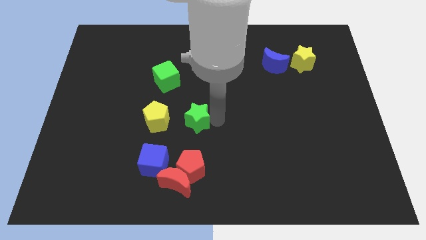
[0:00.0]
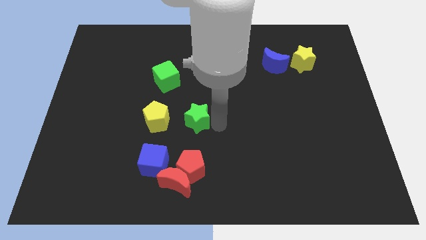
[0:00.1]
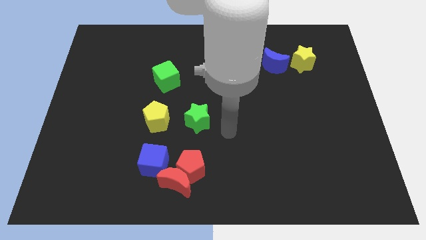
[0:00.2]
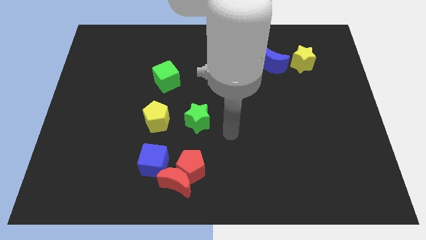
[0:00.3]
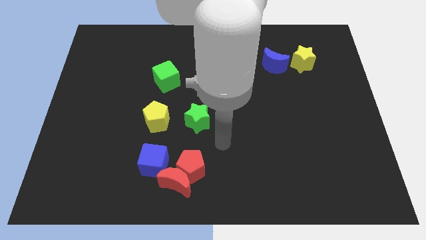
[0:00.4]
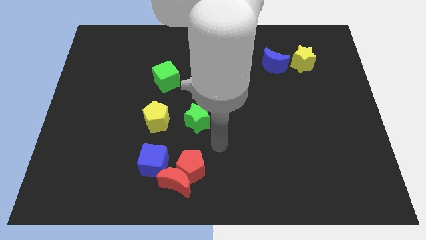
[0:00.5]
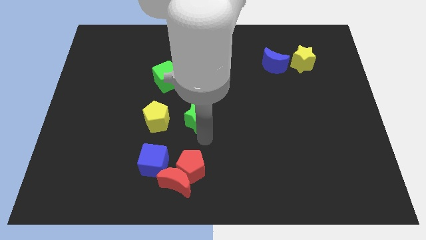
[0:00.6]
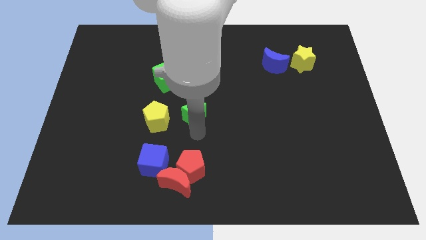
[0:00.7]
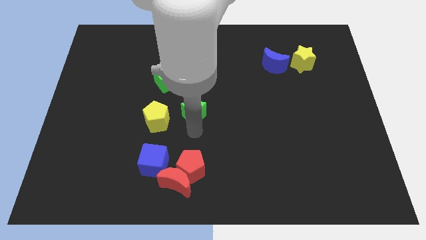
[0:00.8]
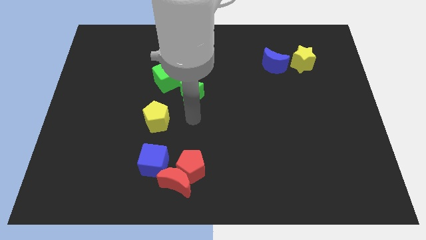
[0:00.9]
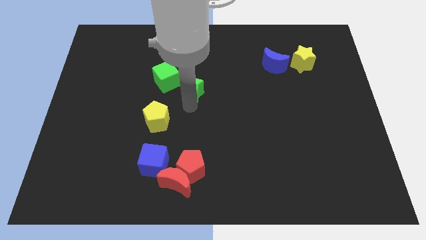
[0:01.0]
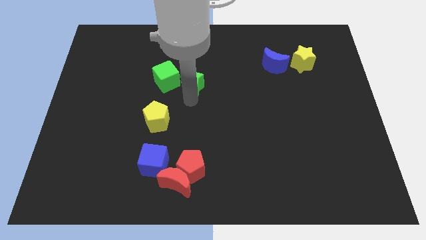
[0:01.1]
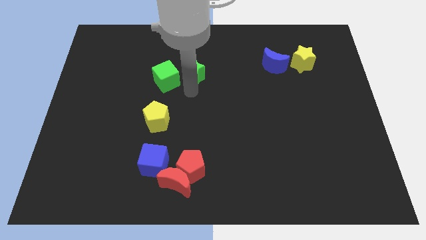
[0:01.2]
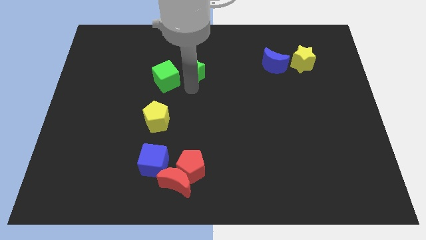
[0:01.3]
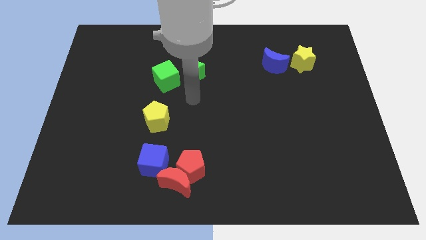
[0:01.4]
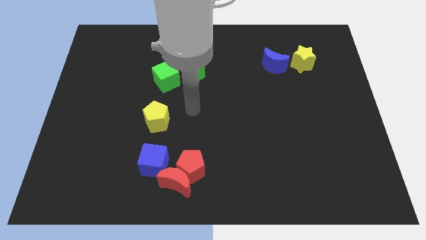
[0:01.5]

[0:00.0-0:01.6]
place the green star to the right side of the green cube

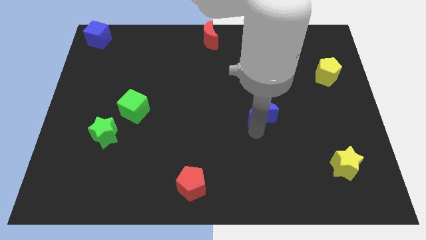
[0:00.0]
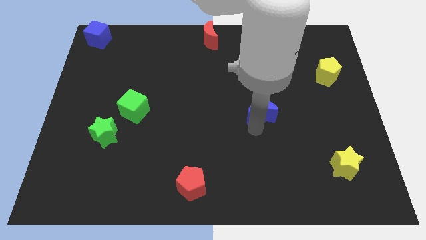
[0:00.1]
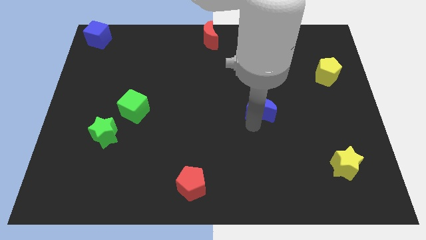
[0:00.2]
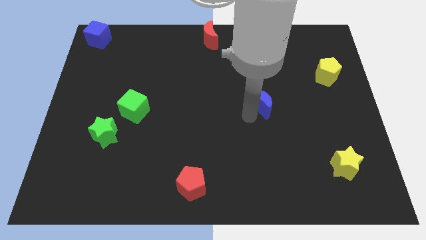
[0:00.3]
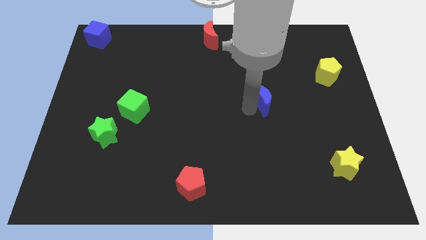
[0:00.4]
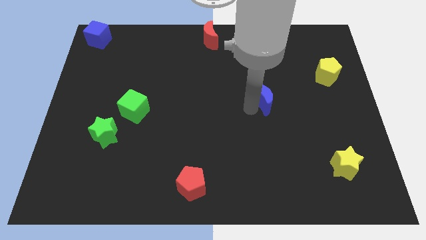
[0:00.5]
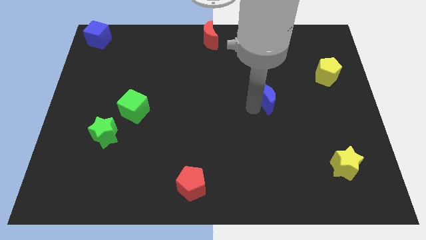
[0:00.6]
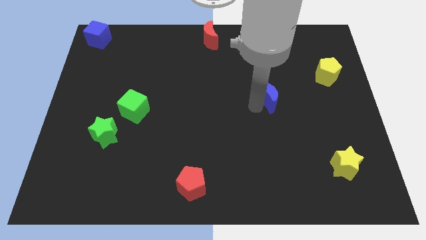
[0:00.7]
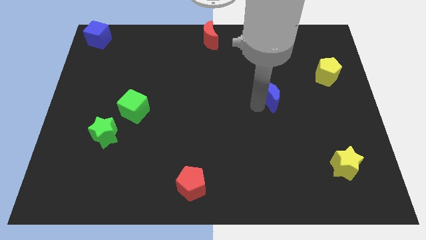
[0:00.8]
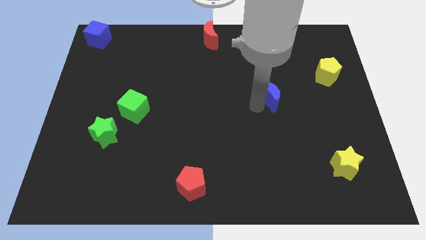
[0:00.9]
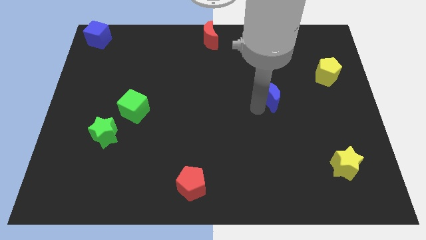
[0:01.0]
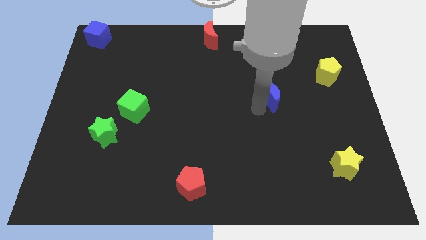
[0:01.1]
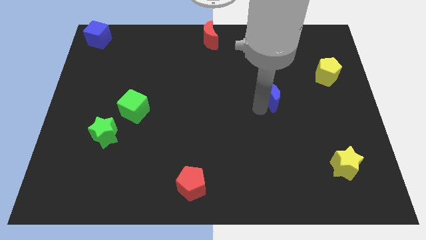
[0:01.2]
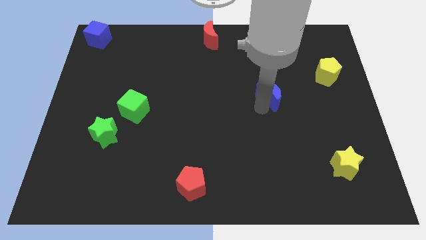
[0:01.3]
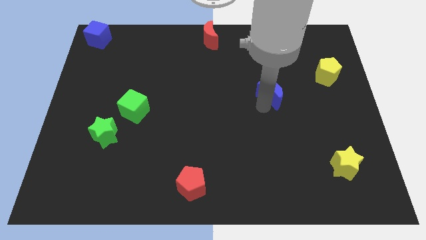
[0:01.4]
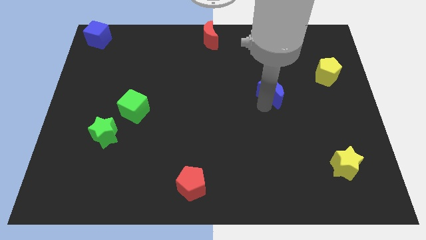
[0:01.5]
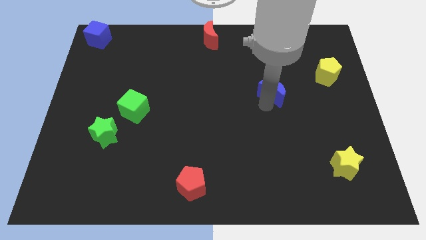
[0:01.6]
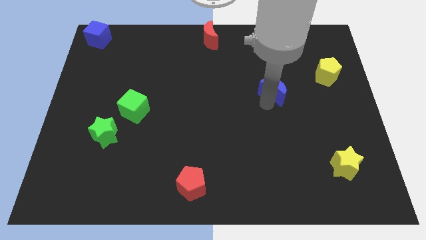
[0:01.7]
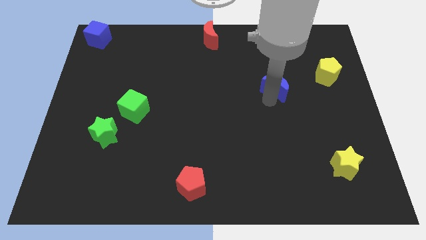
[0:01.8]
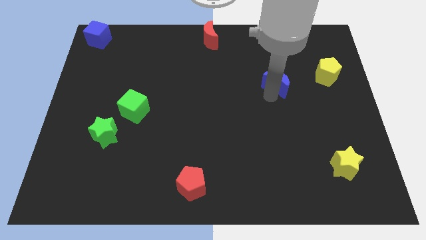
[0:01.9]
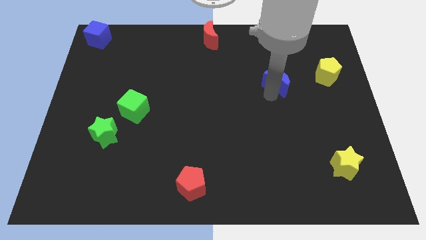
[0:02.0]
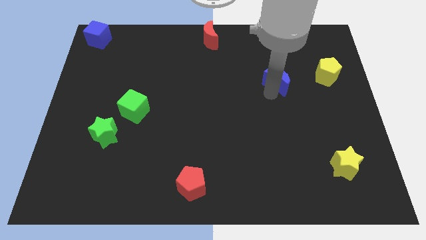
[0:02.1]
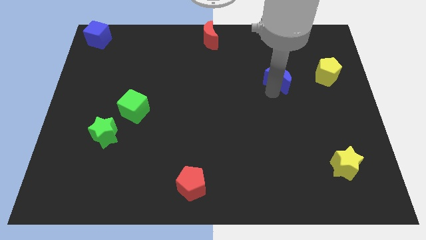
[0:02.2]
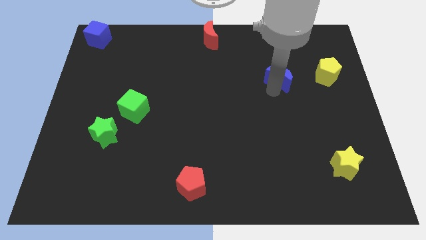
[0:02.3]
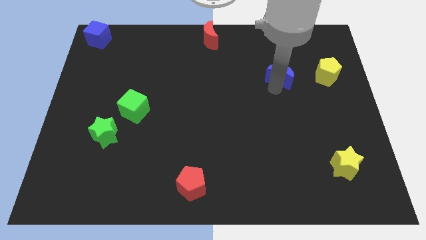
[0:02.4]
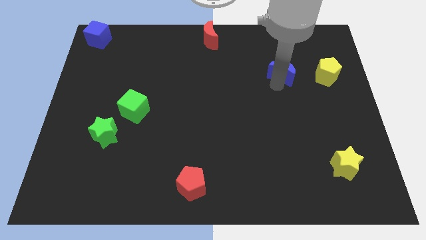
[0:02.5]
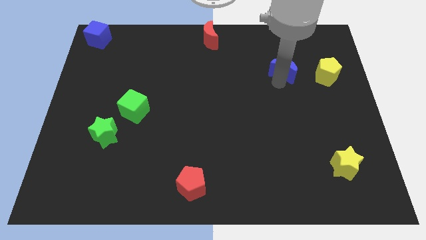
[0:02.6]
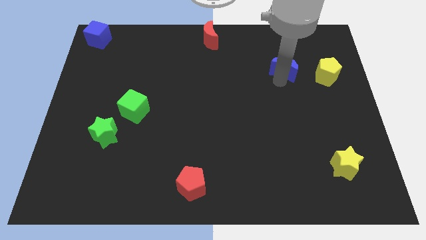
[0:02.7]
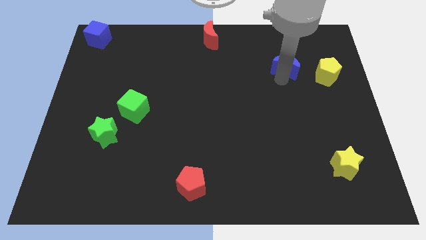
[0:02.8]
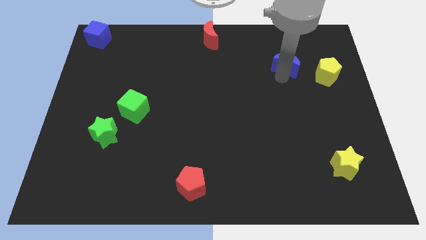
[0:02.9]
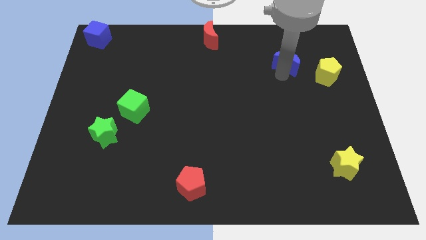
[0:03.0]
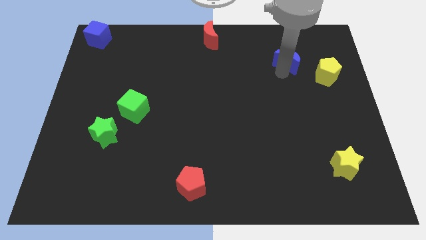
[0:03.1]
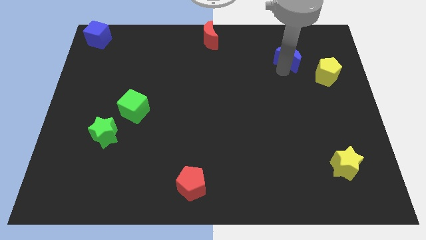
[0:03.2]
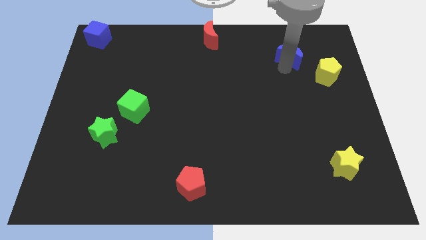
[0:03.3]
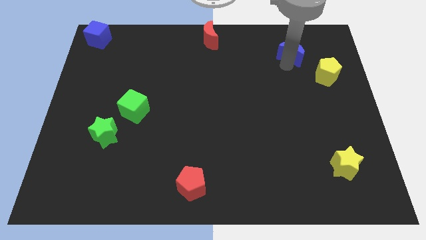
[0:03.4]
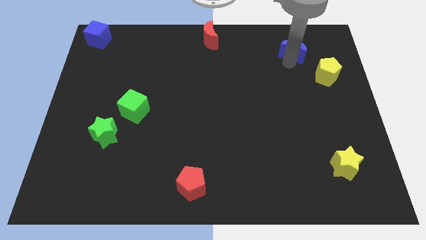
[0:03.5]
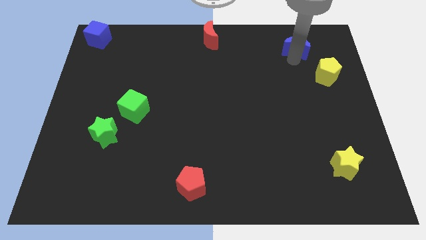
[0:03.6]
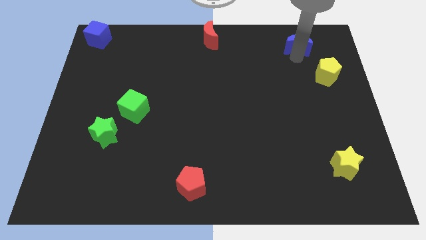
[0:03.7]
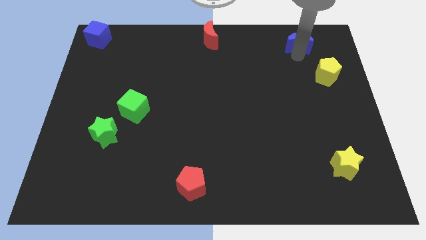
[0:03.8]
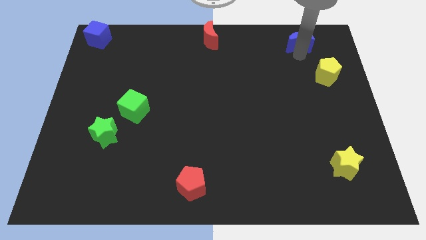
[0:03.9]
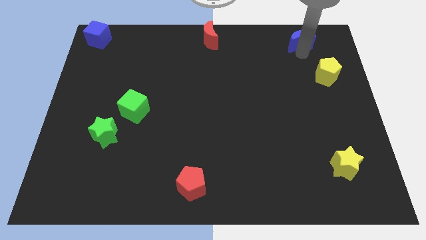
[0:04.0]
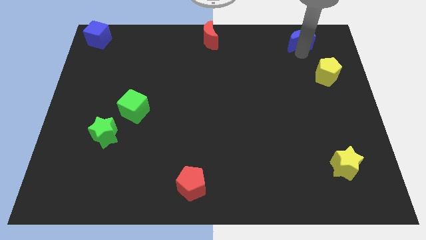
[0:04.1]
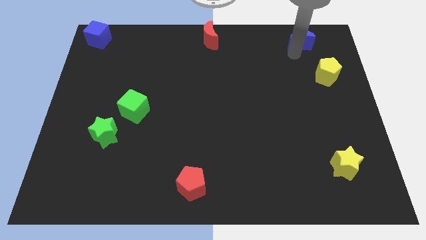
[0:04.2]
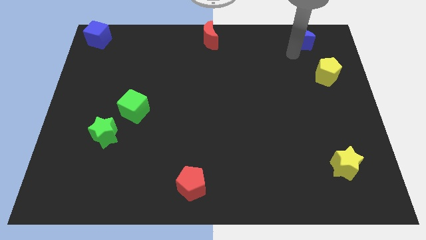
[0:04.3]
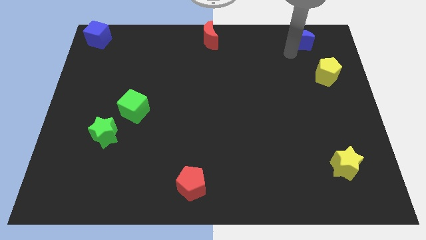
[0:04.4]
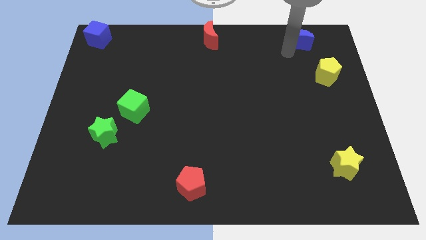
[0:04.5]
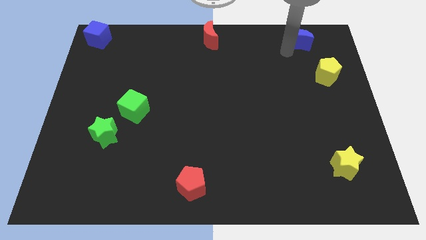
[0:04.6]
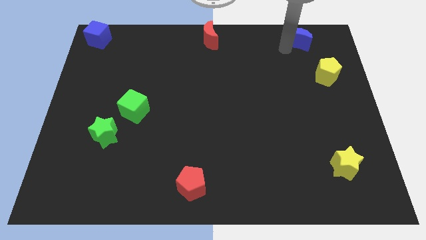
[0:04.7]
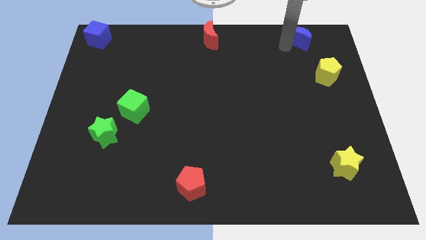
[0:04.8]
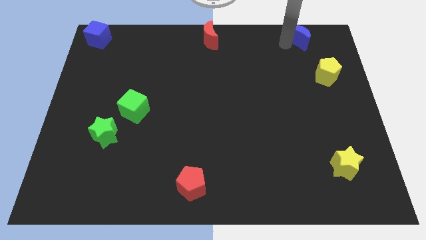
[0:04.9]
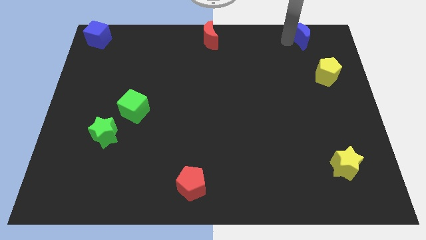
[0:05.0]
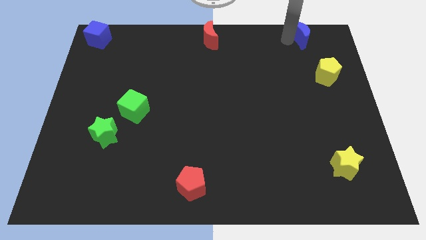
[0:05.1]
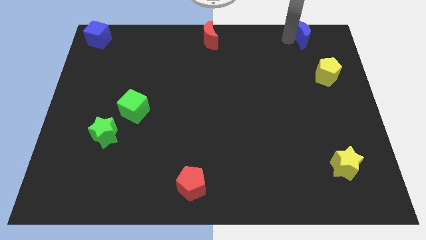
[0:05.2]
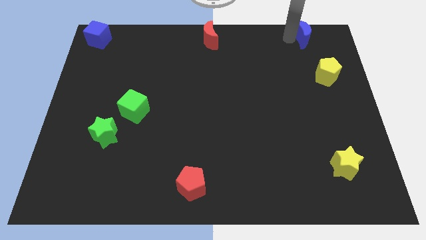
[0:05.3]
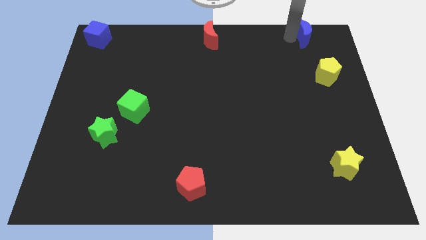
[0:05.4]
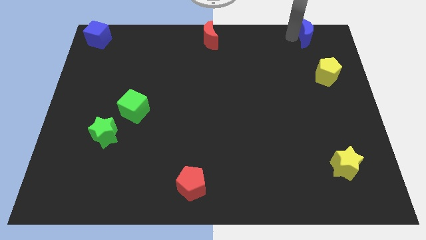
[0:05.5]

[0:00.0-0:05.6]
place the blue moon at the top of the yellow pentagon

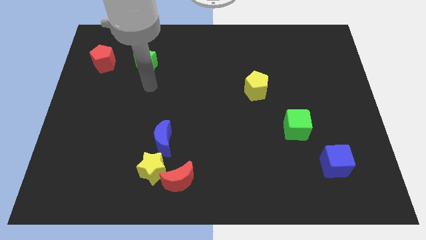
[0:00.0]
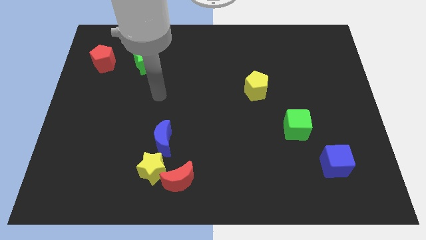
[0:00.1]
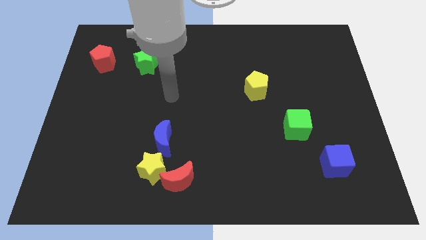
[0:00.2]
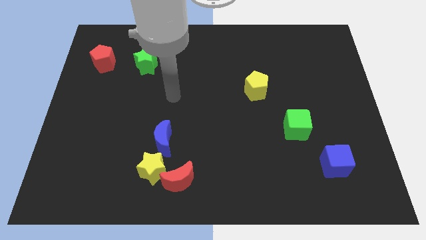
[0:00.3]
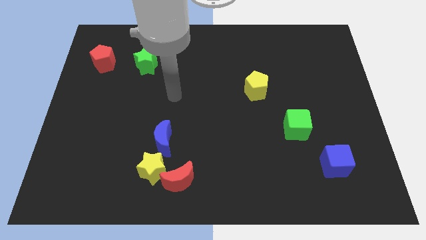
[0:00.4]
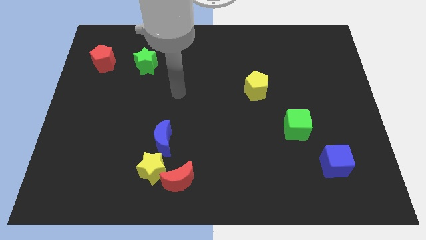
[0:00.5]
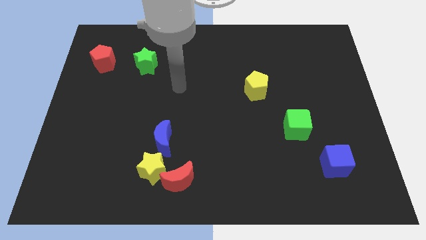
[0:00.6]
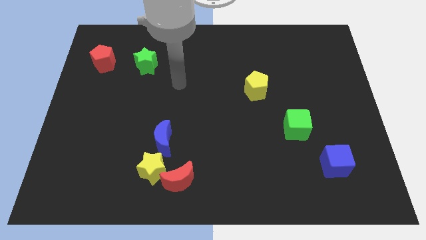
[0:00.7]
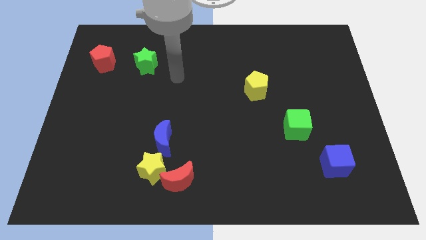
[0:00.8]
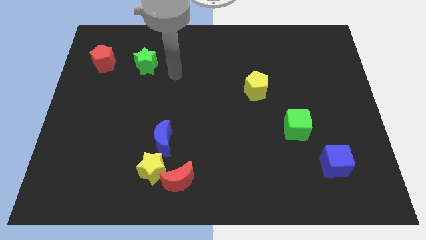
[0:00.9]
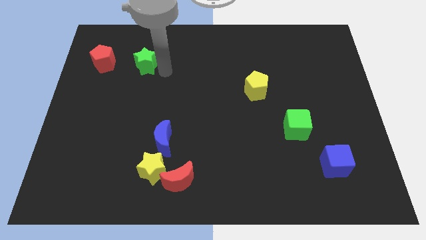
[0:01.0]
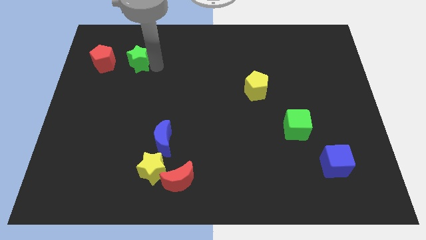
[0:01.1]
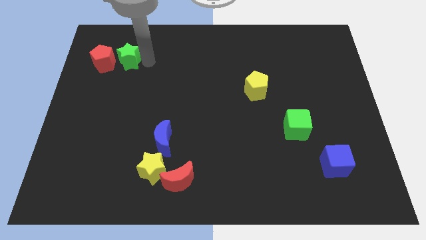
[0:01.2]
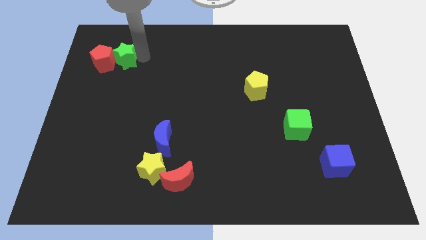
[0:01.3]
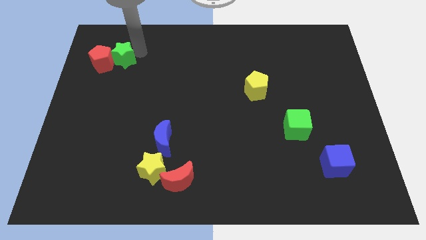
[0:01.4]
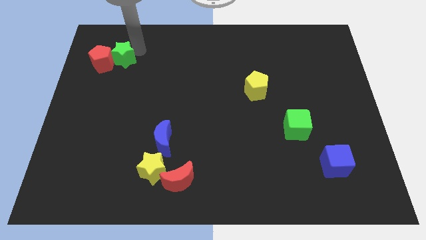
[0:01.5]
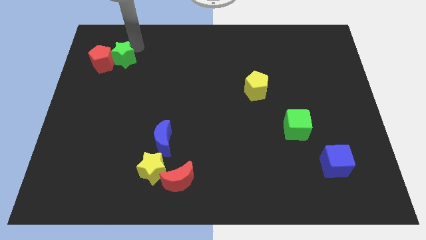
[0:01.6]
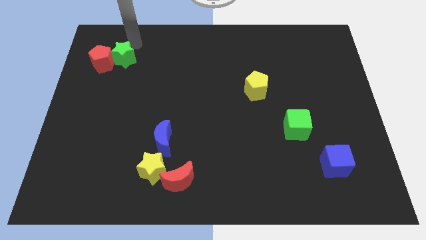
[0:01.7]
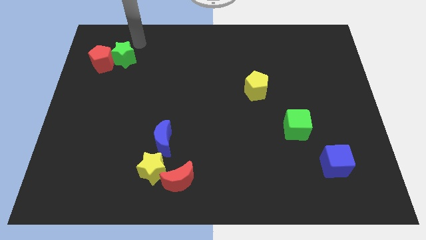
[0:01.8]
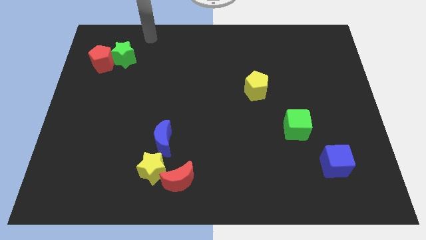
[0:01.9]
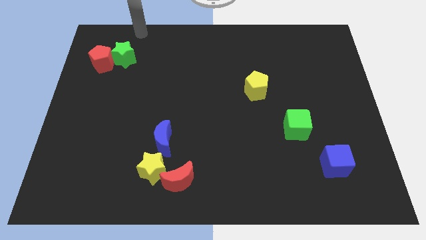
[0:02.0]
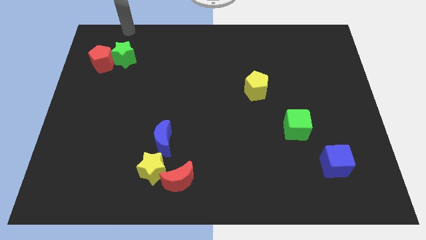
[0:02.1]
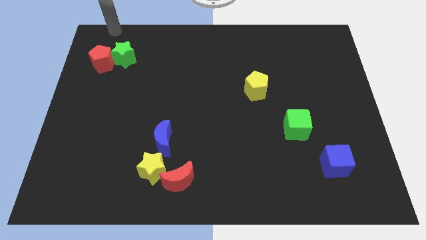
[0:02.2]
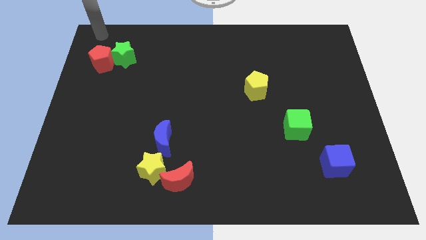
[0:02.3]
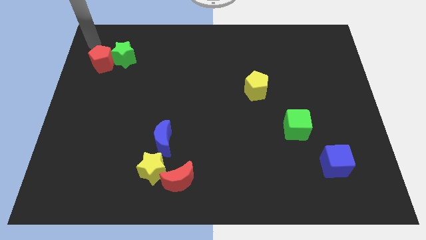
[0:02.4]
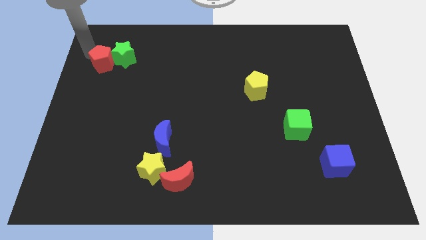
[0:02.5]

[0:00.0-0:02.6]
push the green star closely to the right of the red pentagon
